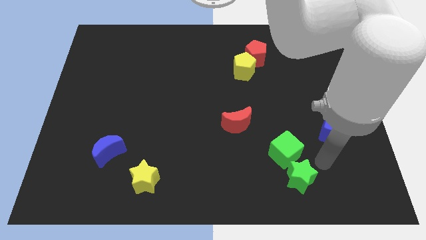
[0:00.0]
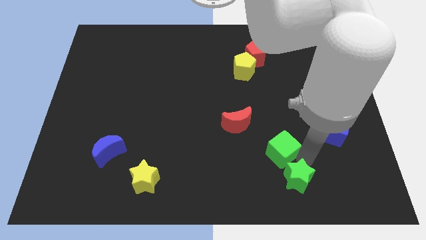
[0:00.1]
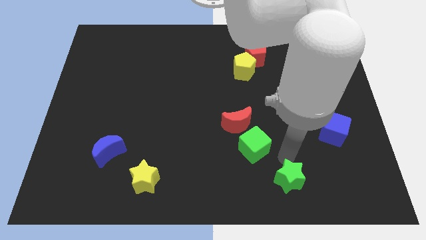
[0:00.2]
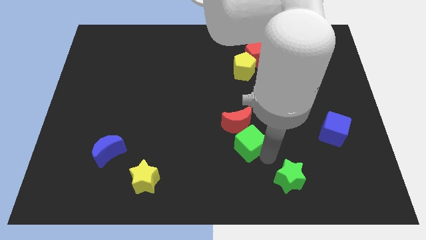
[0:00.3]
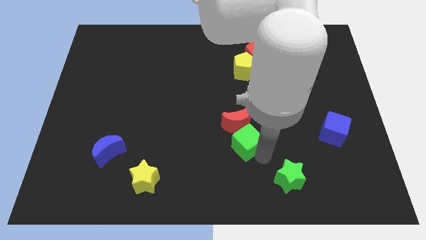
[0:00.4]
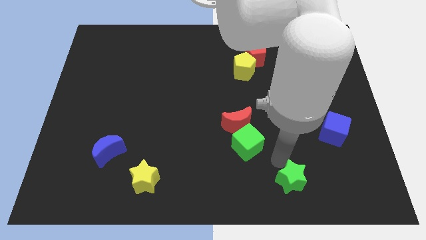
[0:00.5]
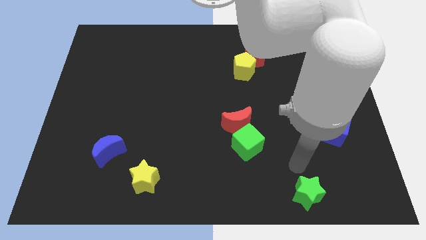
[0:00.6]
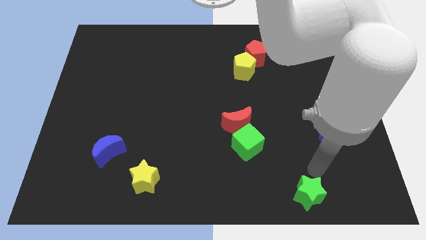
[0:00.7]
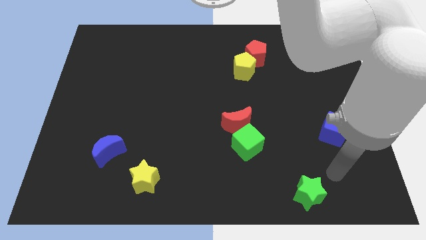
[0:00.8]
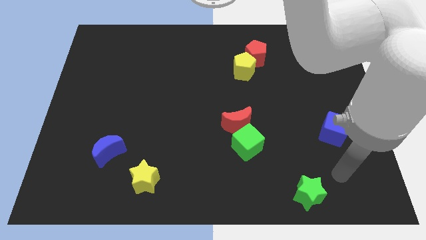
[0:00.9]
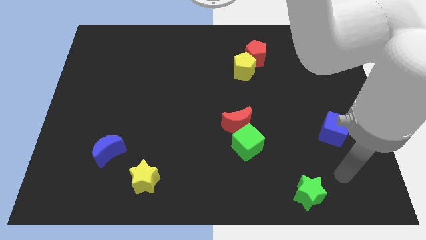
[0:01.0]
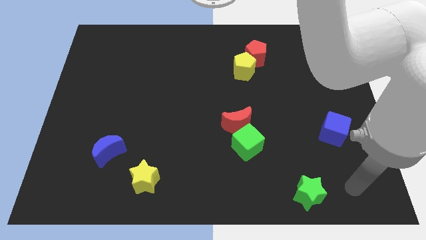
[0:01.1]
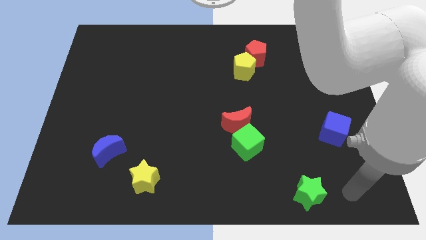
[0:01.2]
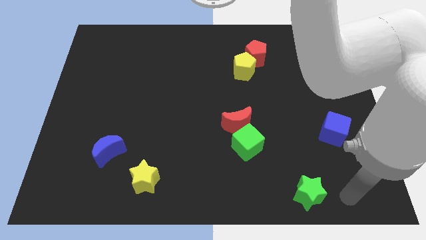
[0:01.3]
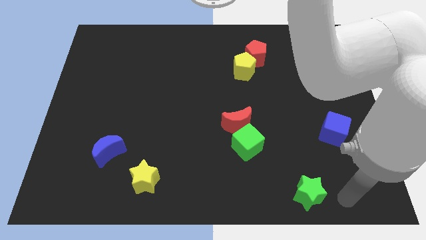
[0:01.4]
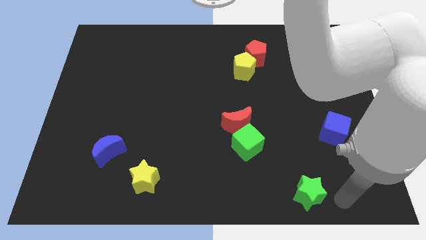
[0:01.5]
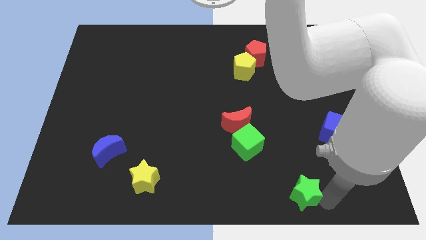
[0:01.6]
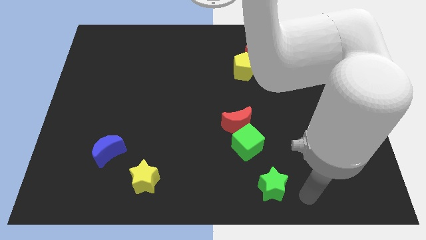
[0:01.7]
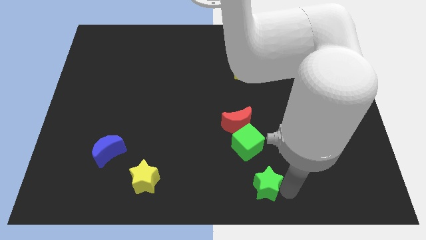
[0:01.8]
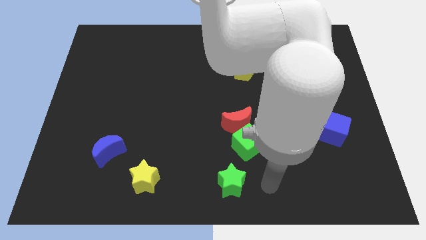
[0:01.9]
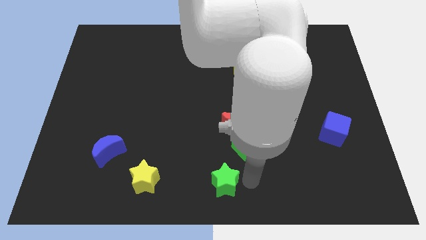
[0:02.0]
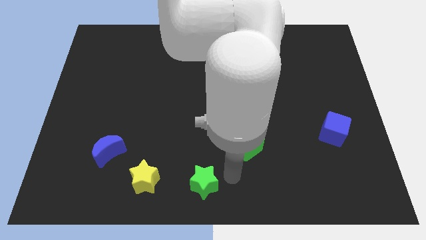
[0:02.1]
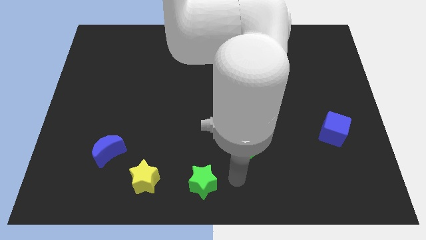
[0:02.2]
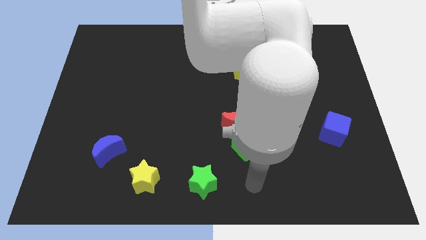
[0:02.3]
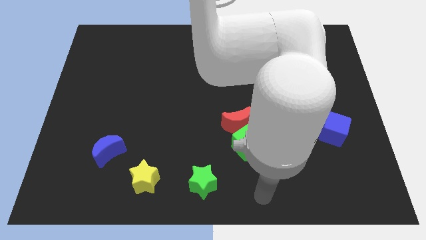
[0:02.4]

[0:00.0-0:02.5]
move the green star to the right side of the yellow star

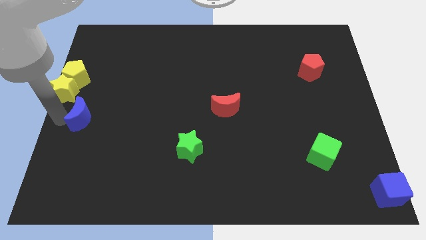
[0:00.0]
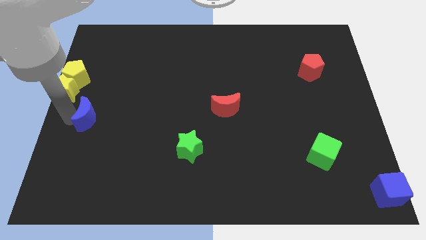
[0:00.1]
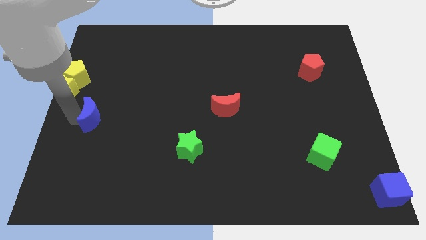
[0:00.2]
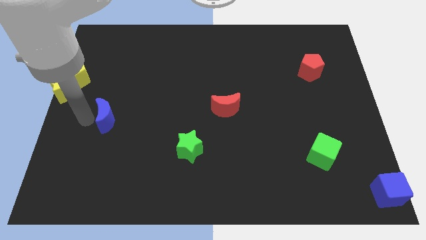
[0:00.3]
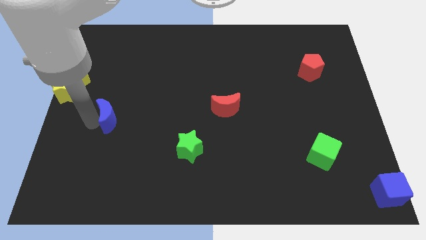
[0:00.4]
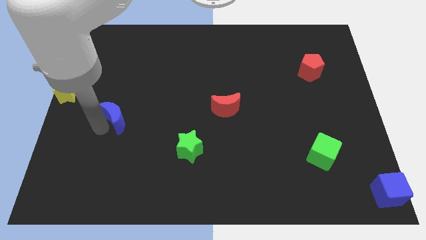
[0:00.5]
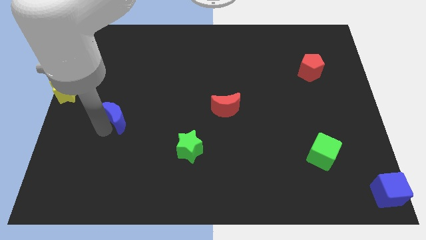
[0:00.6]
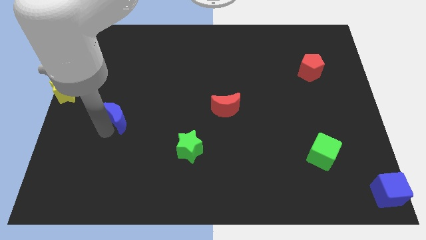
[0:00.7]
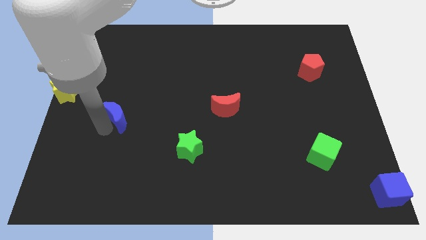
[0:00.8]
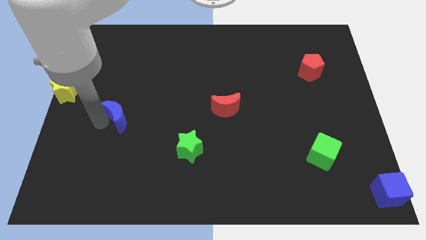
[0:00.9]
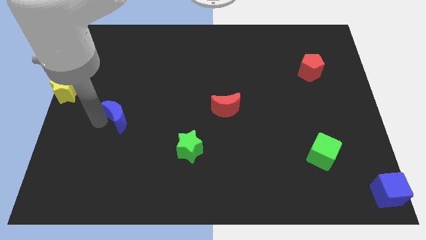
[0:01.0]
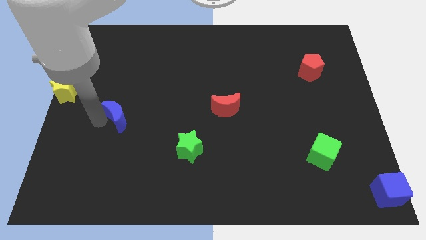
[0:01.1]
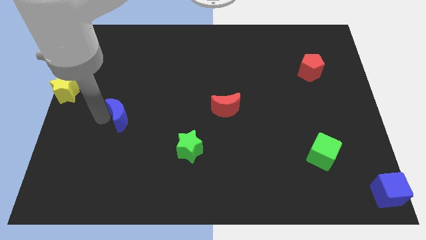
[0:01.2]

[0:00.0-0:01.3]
place the blue moon between green star and yellow star

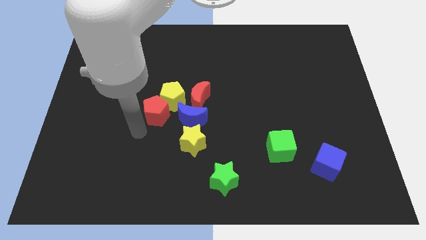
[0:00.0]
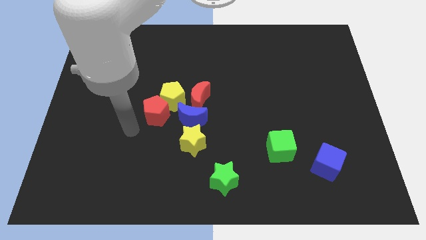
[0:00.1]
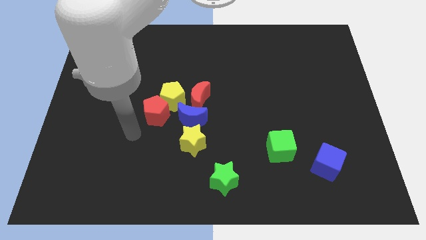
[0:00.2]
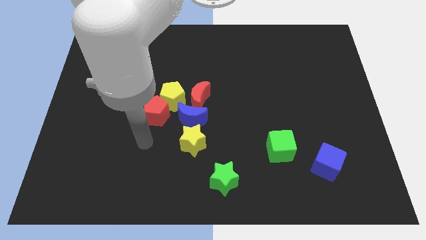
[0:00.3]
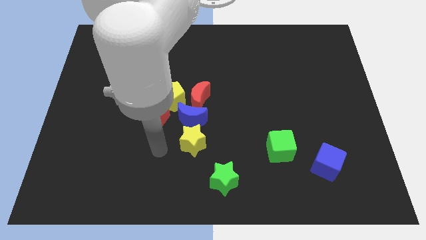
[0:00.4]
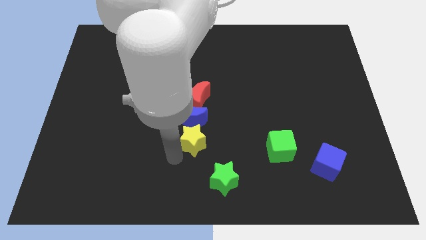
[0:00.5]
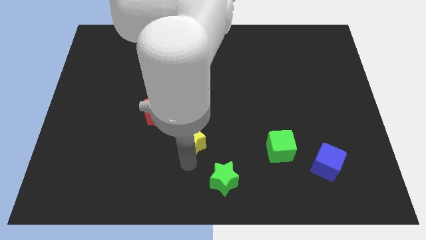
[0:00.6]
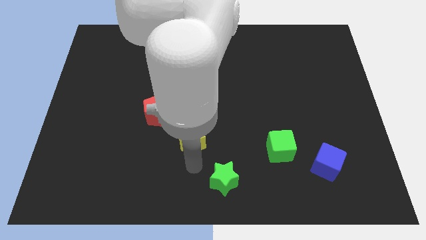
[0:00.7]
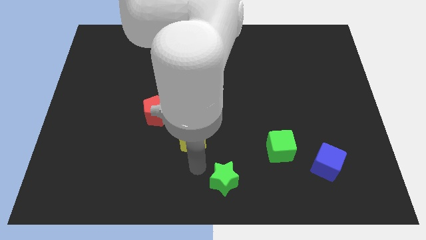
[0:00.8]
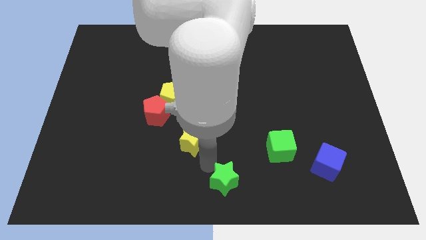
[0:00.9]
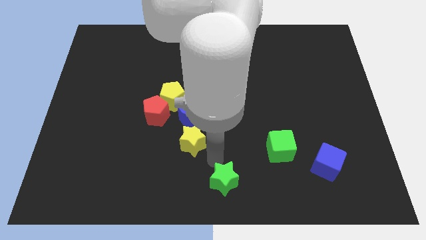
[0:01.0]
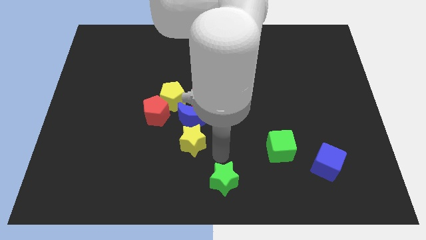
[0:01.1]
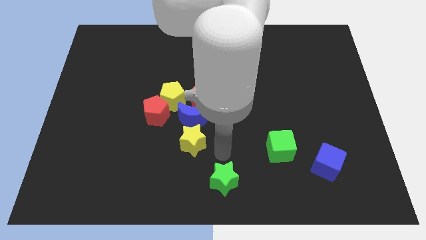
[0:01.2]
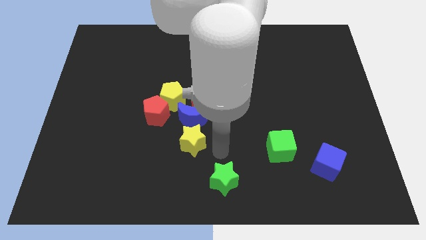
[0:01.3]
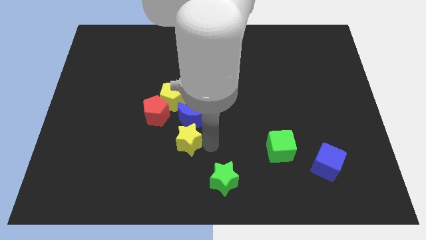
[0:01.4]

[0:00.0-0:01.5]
place your arm to the right side of the yellow star

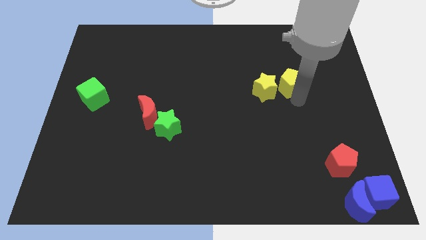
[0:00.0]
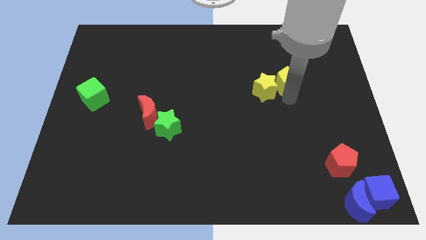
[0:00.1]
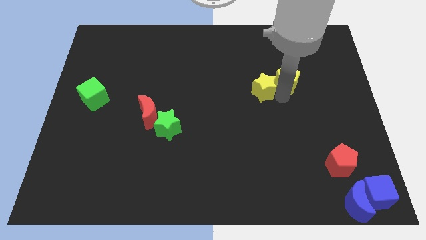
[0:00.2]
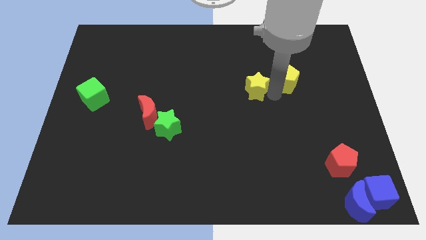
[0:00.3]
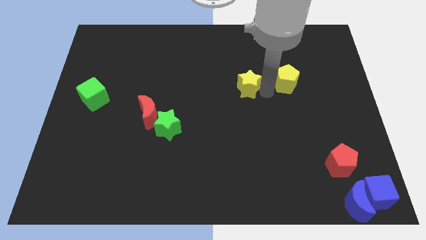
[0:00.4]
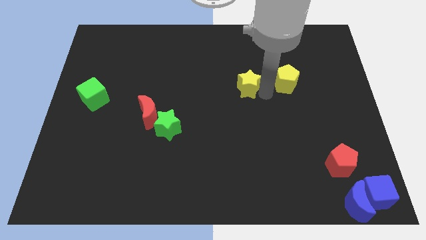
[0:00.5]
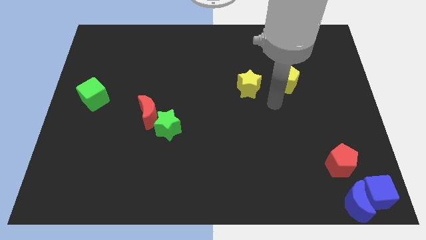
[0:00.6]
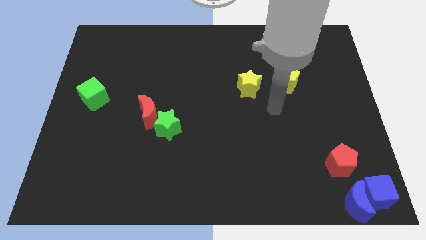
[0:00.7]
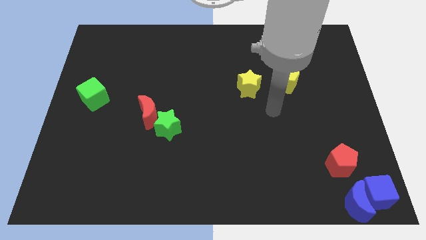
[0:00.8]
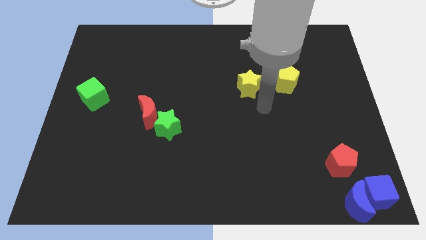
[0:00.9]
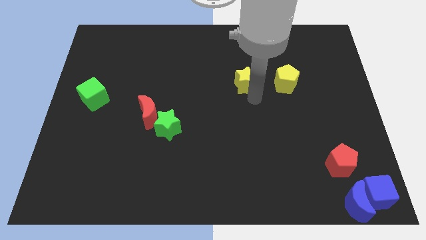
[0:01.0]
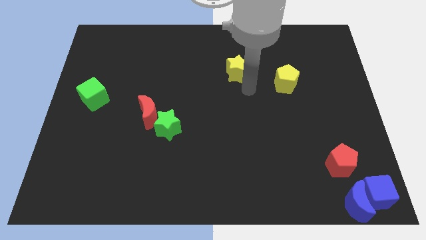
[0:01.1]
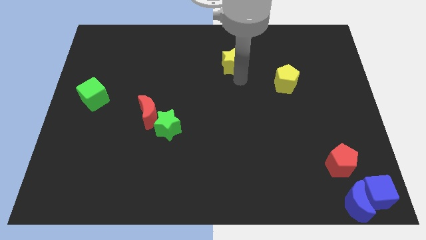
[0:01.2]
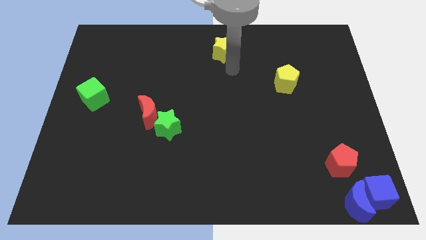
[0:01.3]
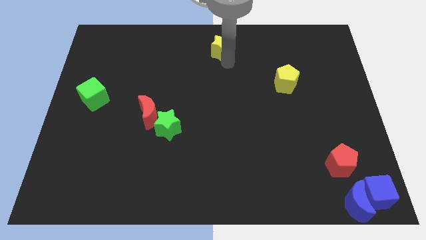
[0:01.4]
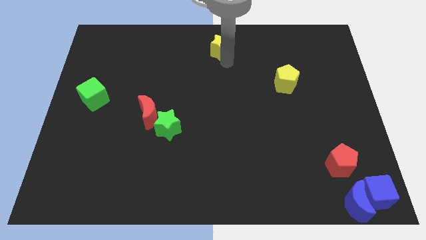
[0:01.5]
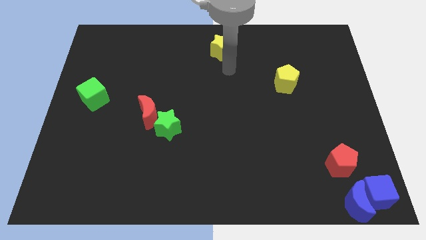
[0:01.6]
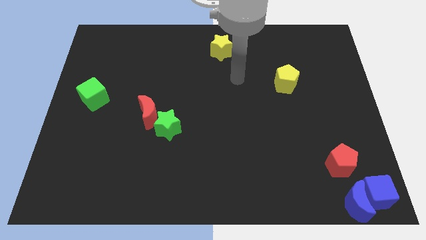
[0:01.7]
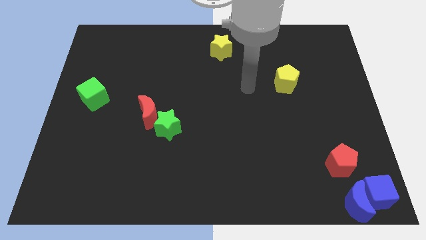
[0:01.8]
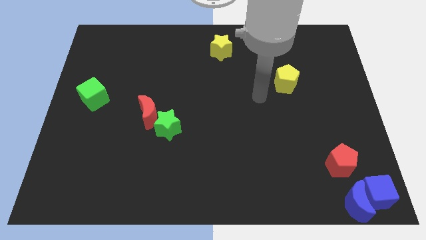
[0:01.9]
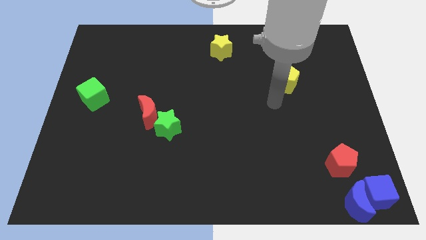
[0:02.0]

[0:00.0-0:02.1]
move yellow star to top center

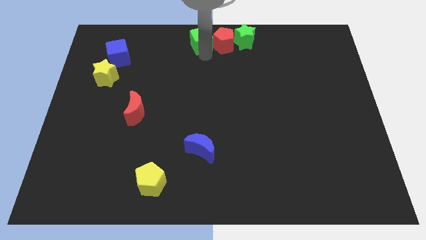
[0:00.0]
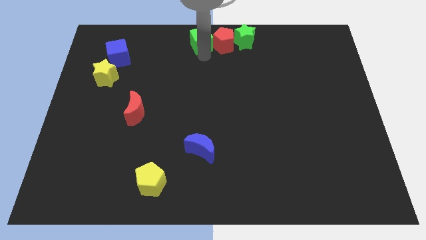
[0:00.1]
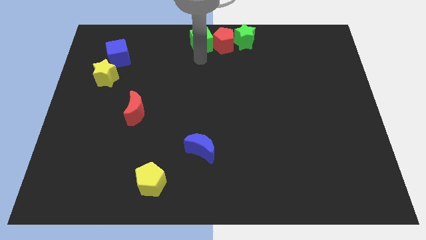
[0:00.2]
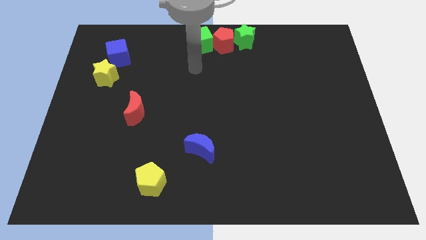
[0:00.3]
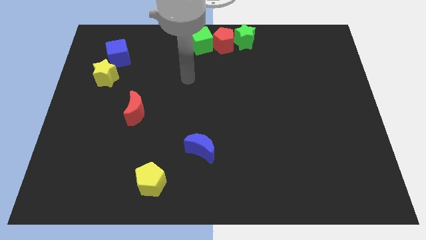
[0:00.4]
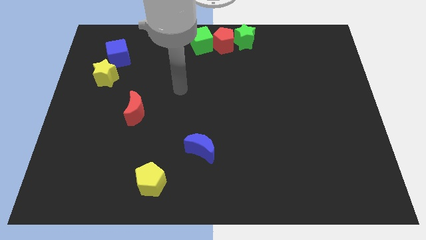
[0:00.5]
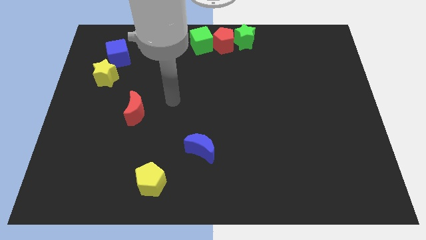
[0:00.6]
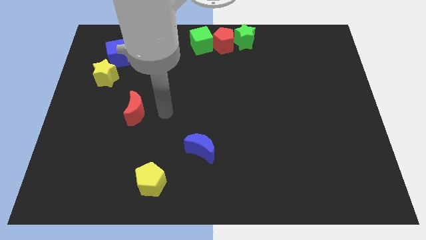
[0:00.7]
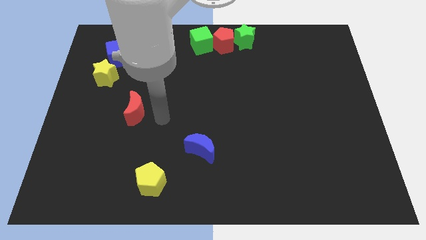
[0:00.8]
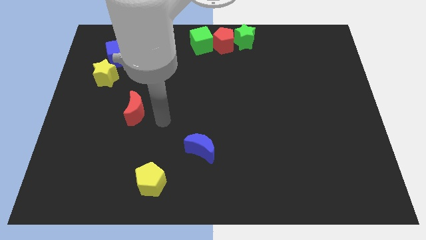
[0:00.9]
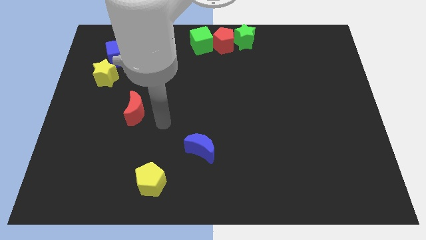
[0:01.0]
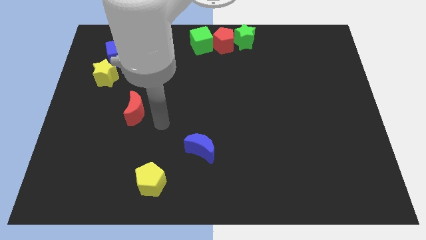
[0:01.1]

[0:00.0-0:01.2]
move the arm away from the green cube

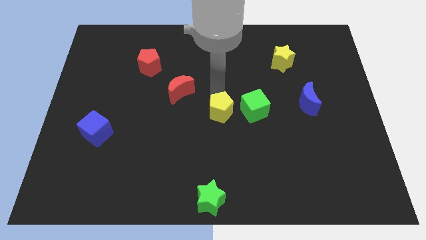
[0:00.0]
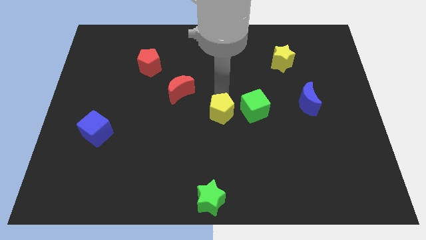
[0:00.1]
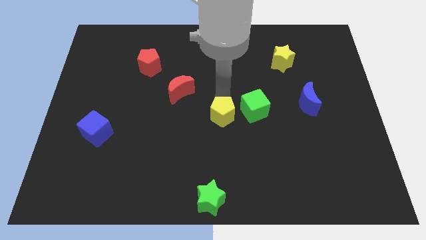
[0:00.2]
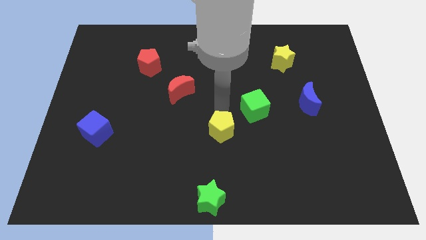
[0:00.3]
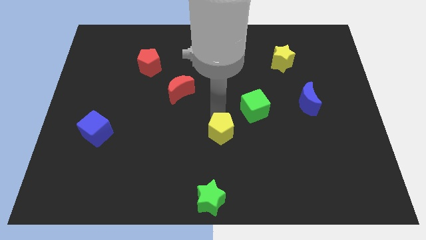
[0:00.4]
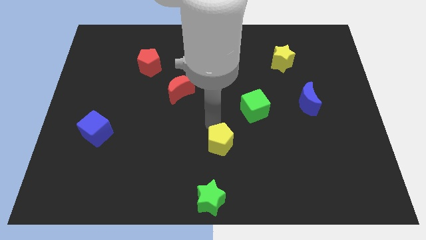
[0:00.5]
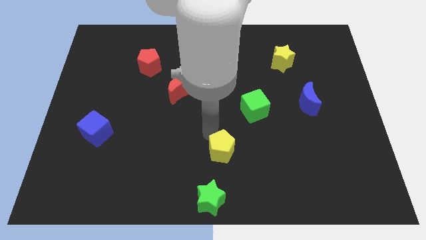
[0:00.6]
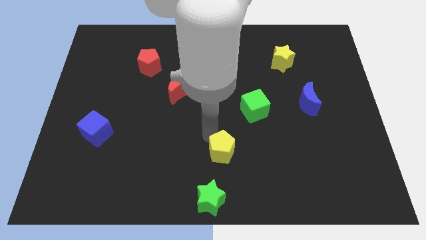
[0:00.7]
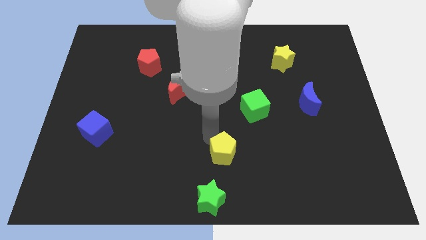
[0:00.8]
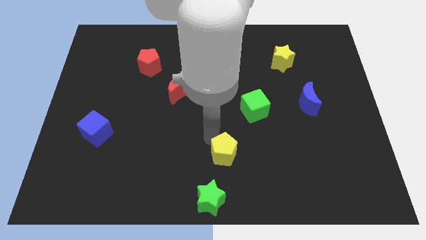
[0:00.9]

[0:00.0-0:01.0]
push the yellow pentagon to the bottom left of the green cube
